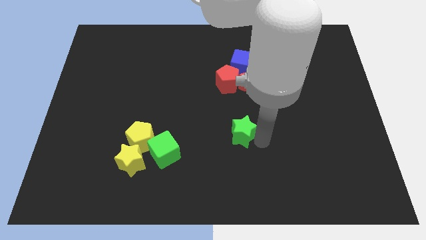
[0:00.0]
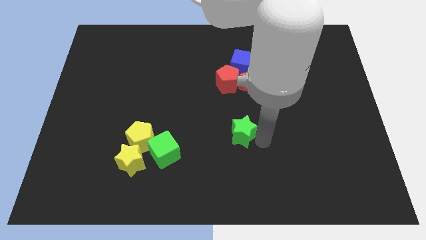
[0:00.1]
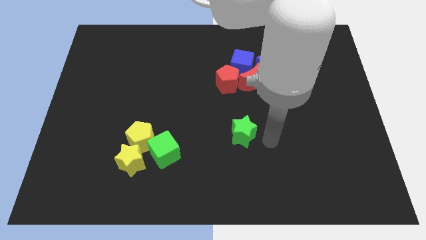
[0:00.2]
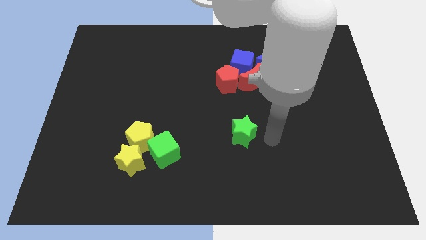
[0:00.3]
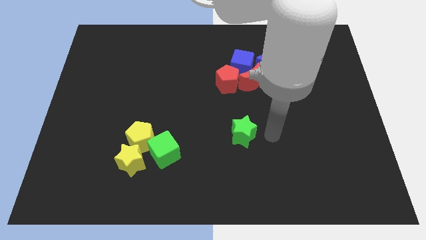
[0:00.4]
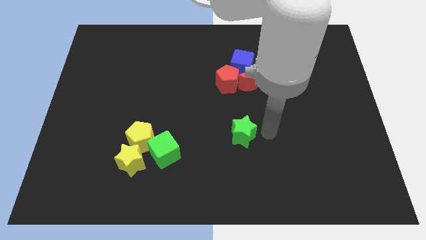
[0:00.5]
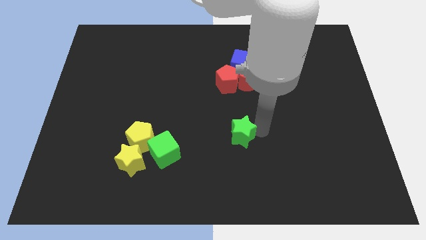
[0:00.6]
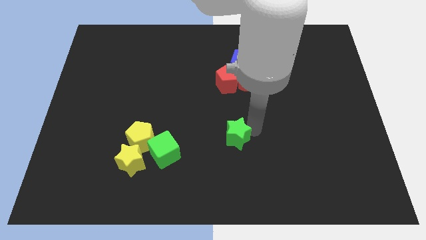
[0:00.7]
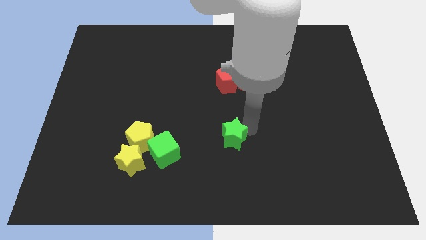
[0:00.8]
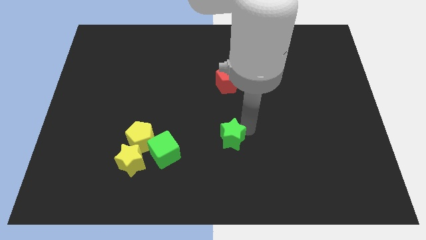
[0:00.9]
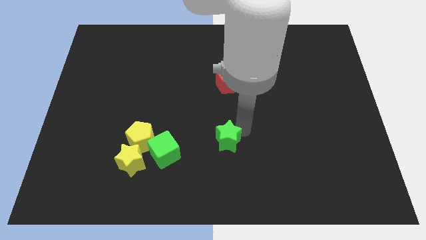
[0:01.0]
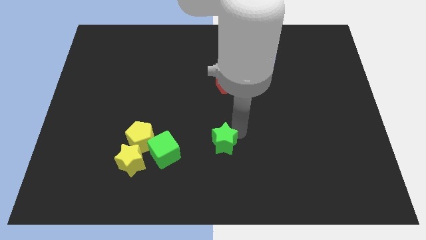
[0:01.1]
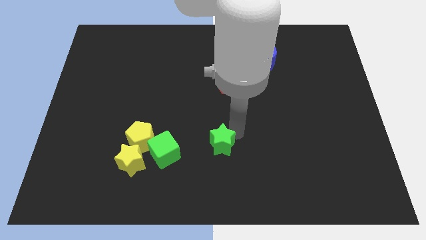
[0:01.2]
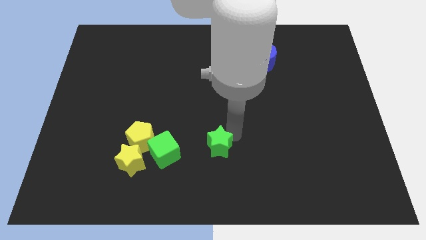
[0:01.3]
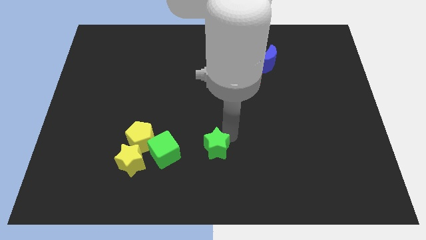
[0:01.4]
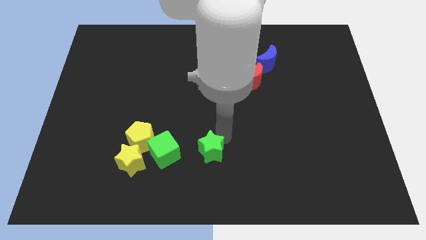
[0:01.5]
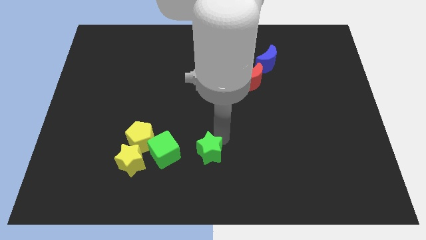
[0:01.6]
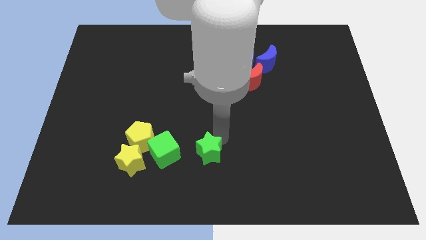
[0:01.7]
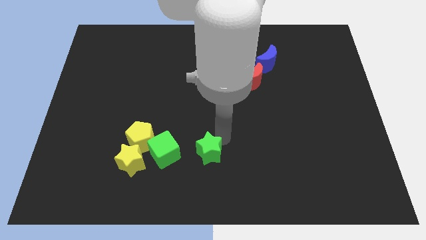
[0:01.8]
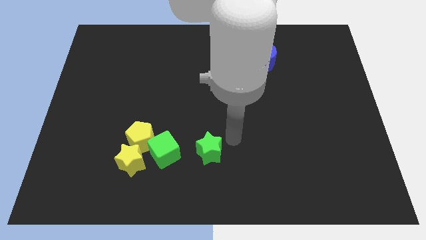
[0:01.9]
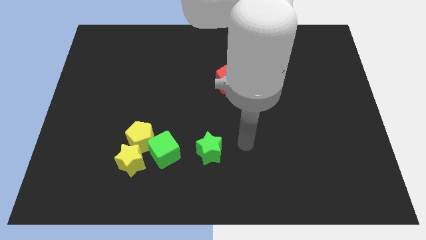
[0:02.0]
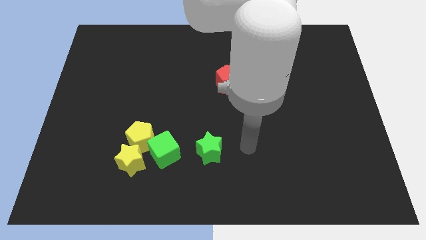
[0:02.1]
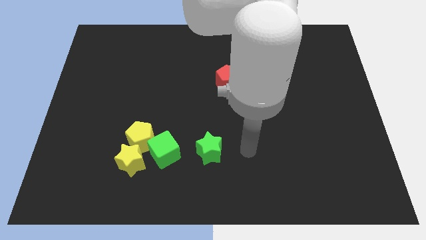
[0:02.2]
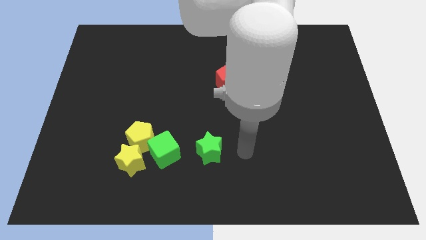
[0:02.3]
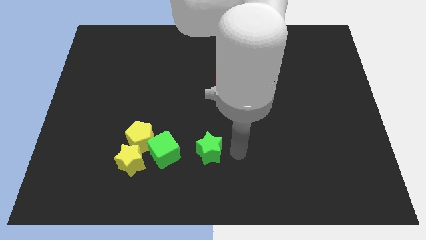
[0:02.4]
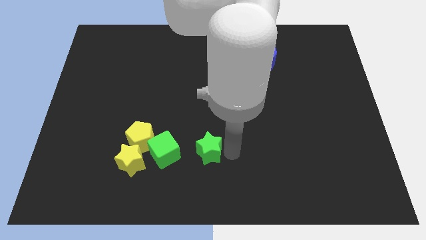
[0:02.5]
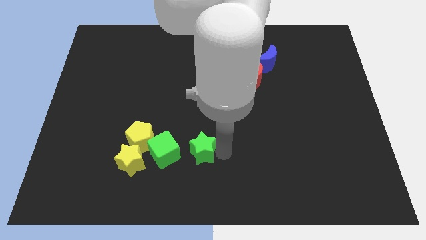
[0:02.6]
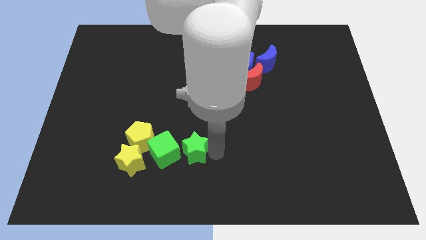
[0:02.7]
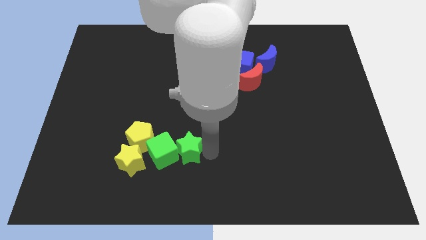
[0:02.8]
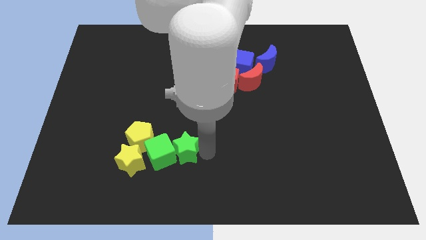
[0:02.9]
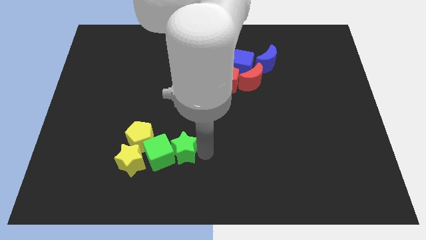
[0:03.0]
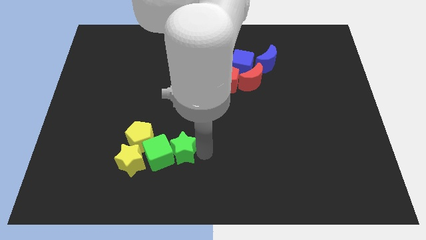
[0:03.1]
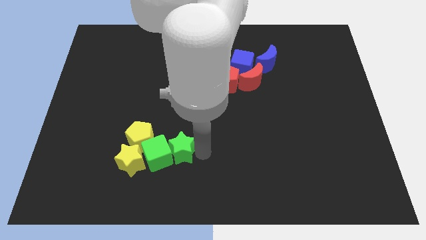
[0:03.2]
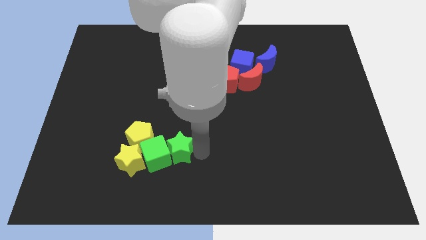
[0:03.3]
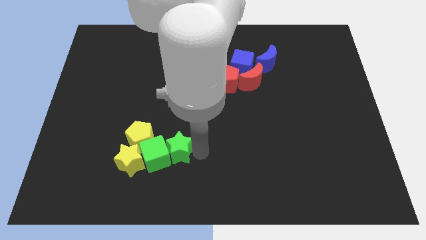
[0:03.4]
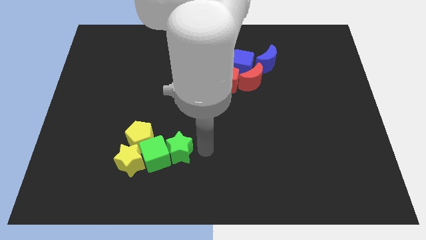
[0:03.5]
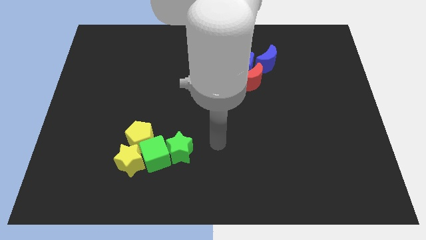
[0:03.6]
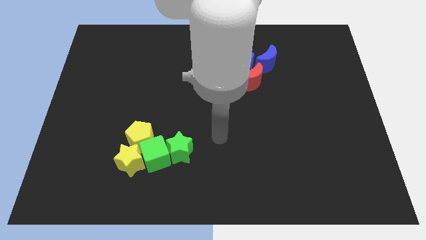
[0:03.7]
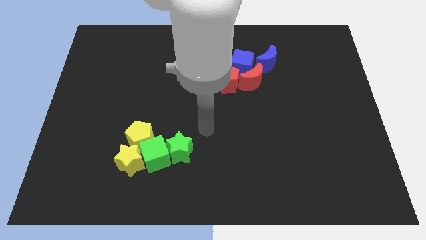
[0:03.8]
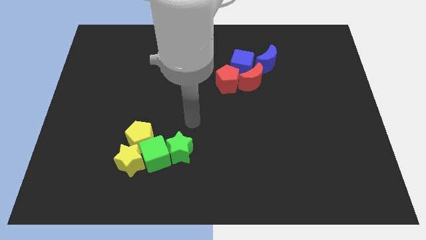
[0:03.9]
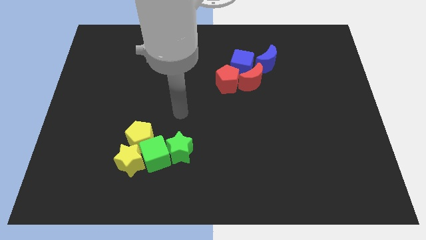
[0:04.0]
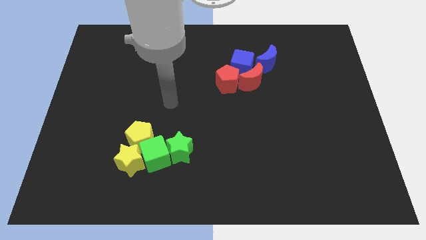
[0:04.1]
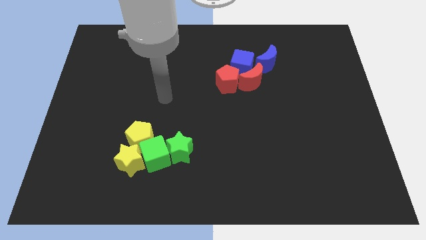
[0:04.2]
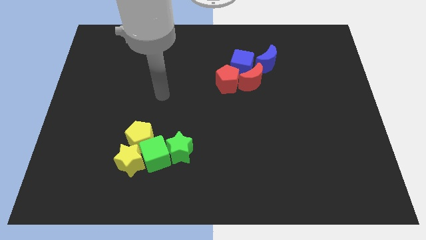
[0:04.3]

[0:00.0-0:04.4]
move the green star into the green cube

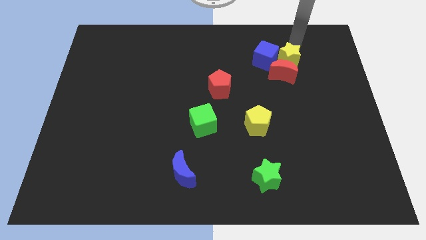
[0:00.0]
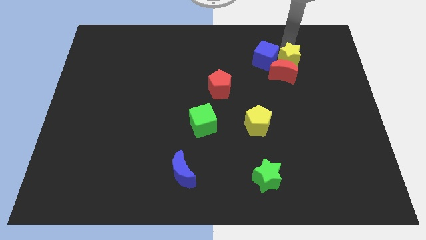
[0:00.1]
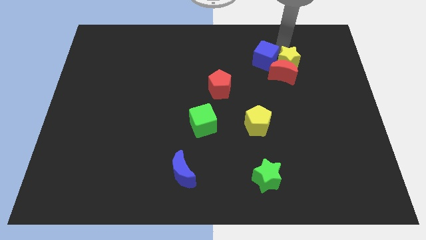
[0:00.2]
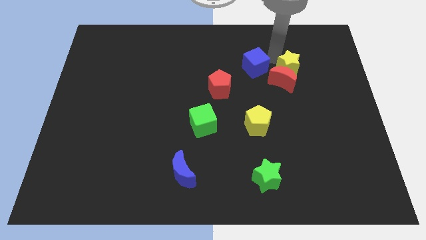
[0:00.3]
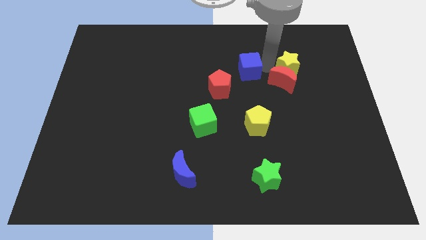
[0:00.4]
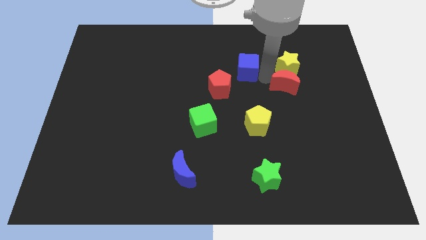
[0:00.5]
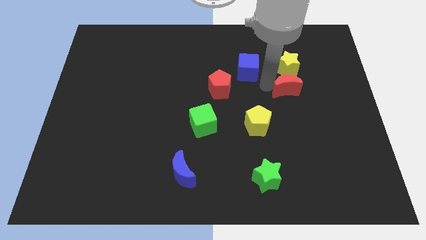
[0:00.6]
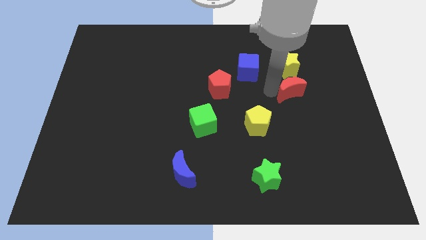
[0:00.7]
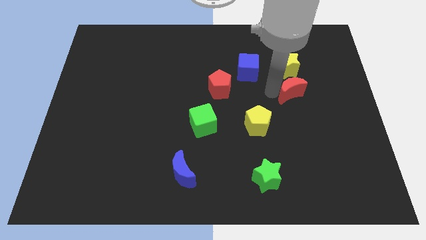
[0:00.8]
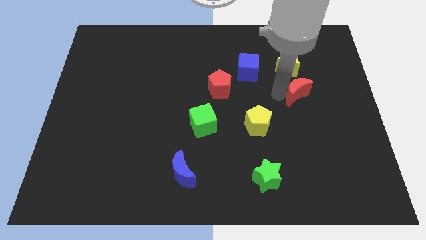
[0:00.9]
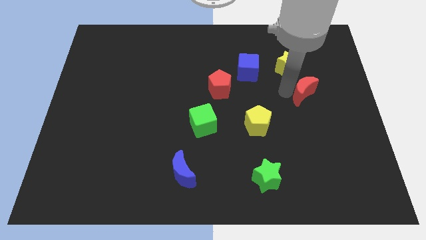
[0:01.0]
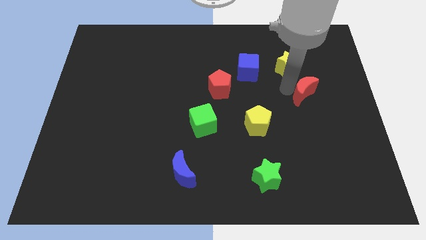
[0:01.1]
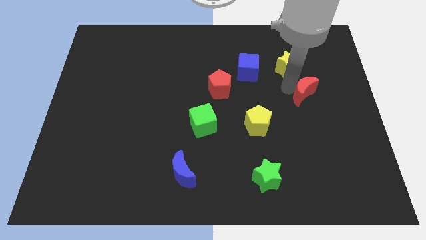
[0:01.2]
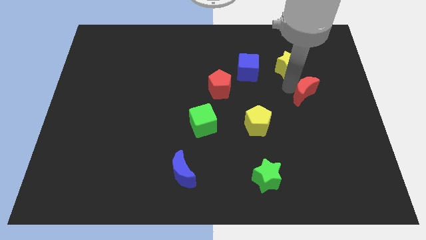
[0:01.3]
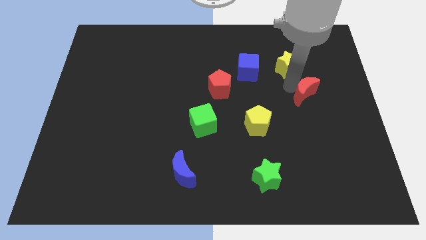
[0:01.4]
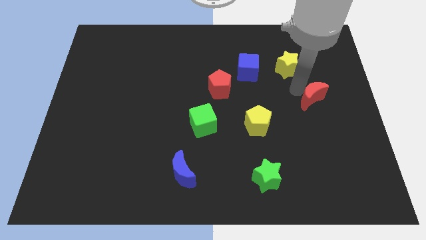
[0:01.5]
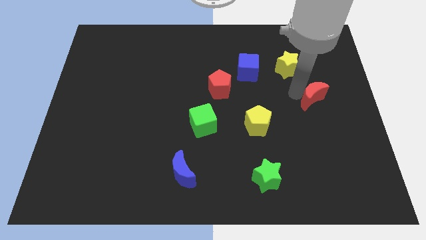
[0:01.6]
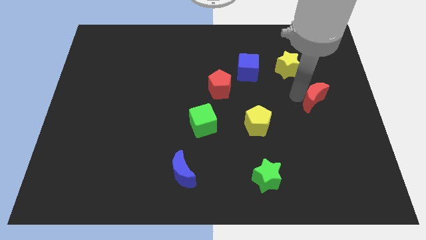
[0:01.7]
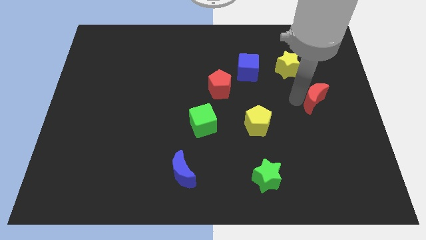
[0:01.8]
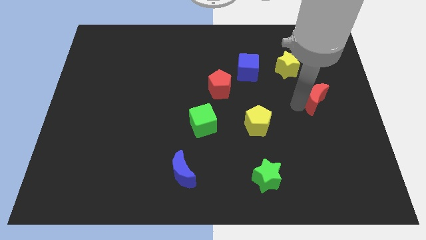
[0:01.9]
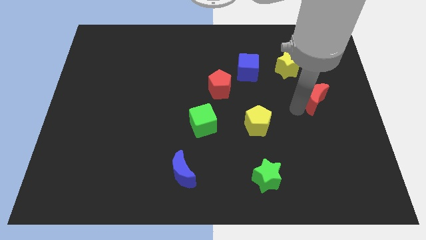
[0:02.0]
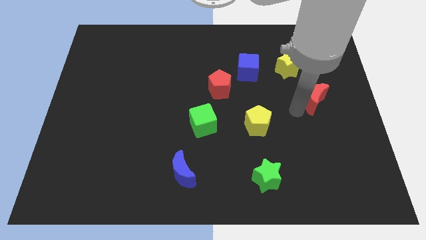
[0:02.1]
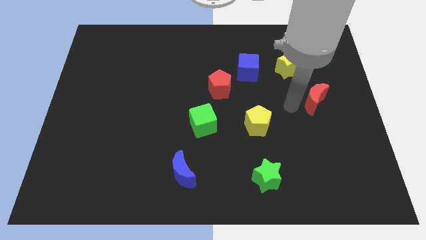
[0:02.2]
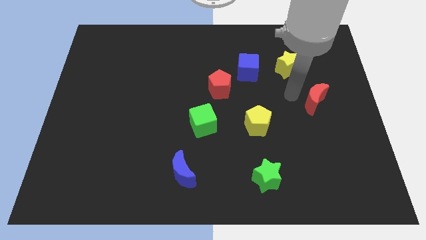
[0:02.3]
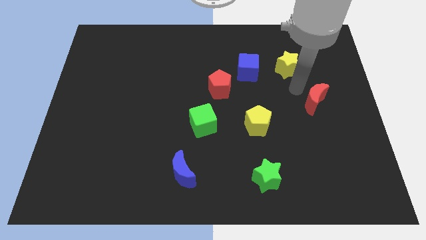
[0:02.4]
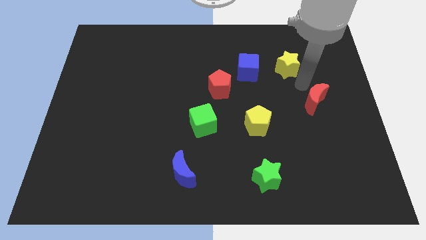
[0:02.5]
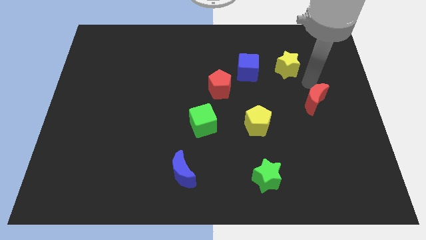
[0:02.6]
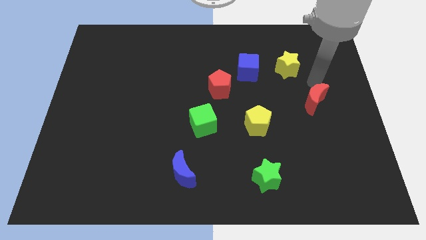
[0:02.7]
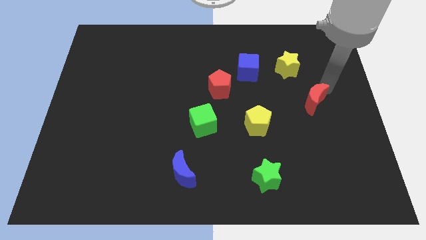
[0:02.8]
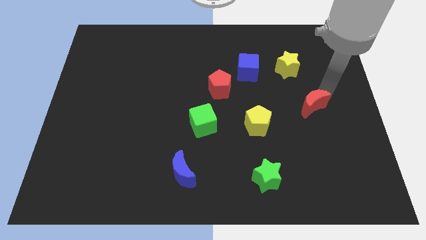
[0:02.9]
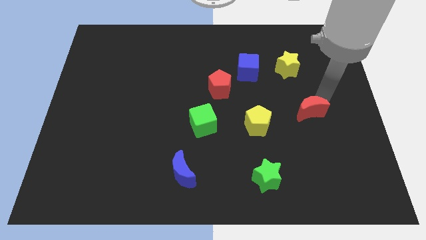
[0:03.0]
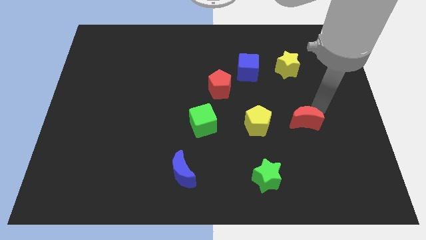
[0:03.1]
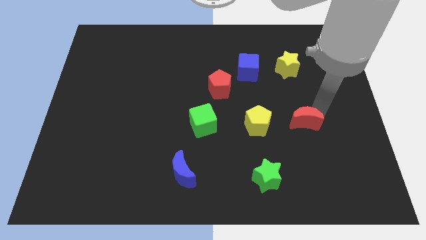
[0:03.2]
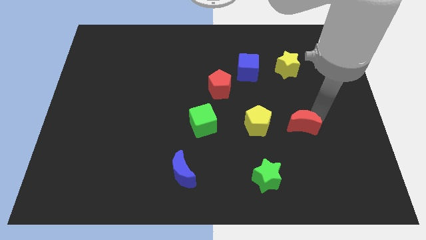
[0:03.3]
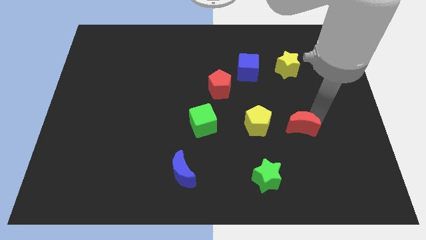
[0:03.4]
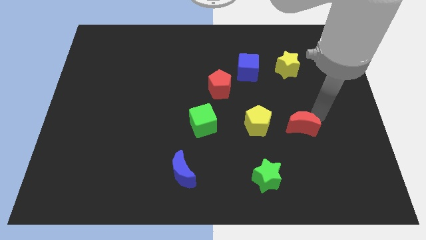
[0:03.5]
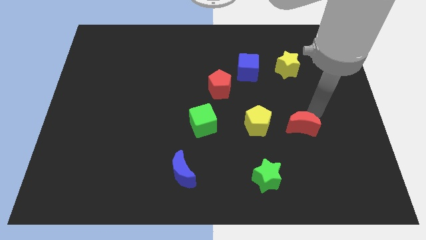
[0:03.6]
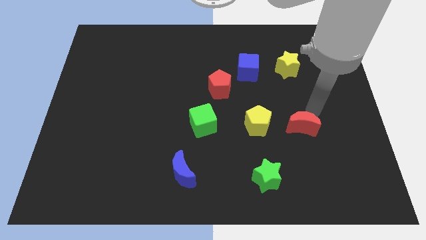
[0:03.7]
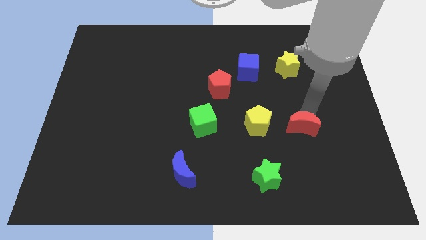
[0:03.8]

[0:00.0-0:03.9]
place the red moon right to the yellow pentagon

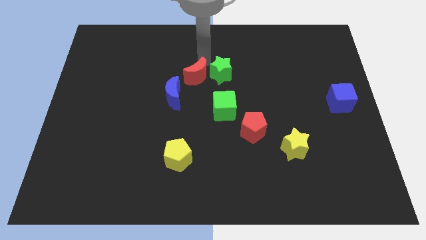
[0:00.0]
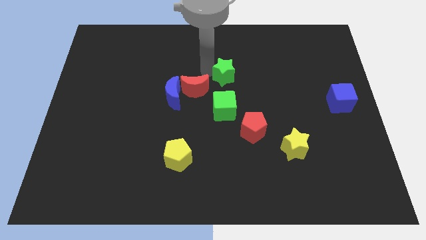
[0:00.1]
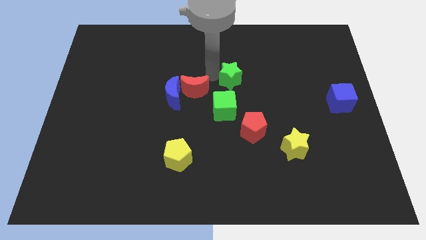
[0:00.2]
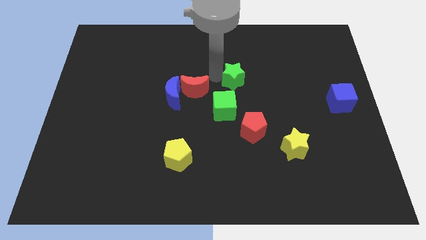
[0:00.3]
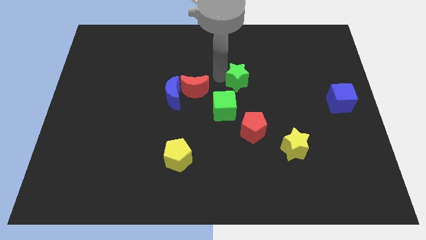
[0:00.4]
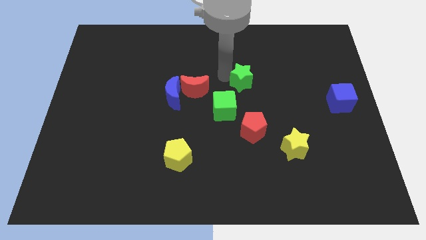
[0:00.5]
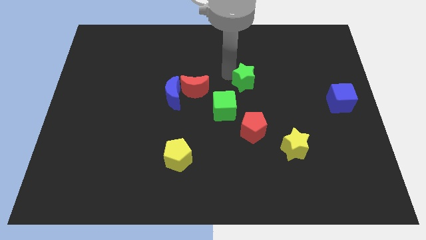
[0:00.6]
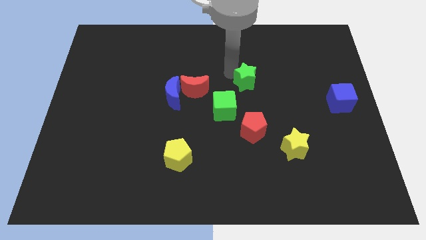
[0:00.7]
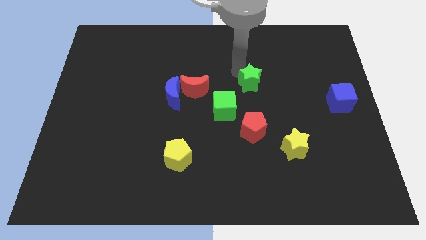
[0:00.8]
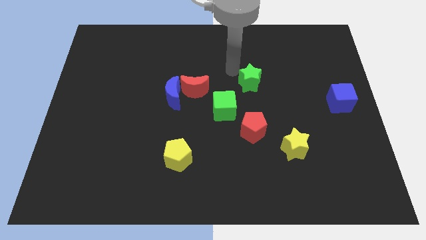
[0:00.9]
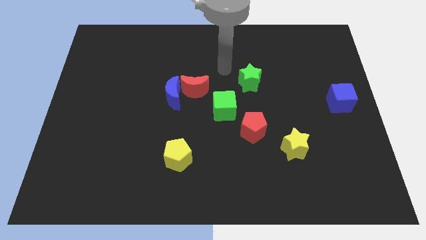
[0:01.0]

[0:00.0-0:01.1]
move the green star at the top right side of the green cube
